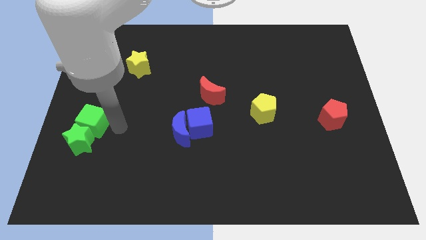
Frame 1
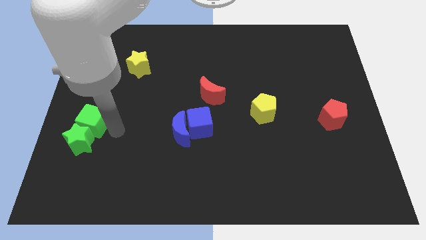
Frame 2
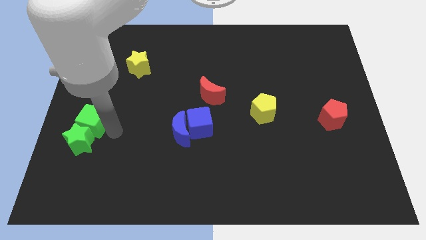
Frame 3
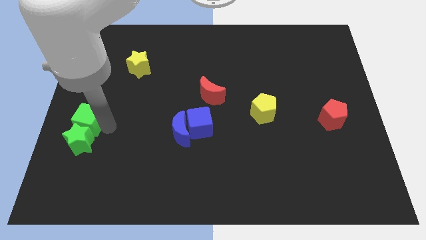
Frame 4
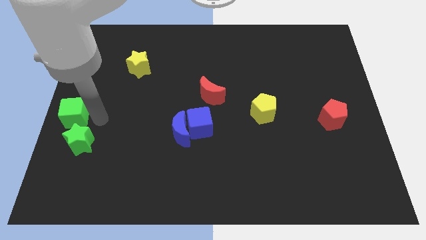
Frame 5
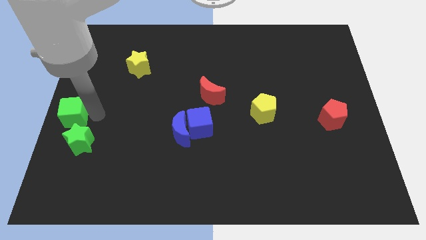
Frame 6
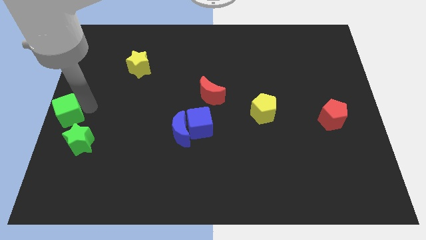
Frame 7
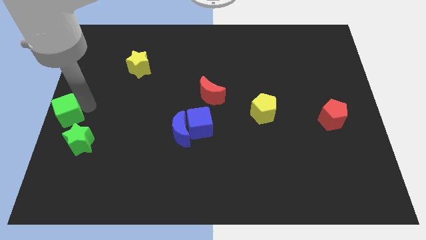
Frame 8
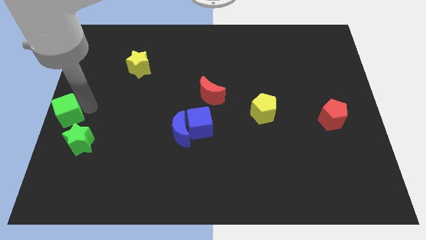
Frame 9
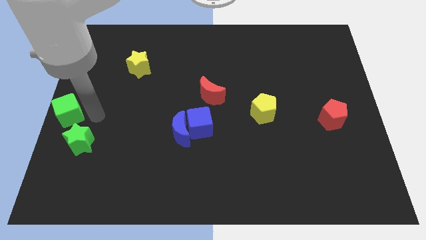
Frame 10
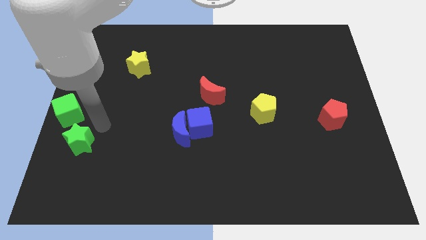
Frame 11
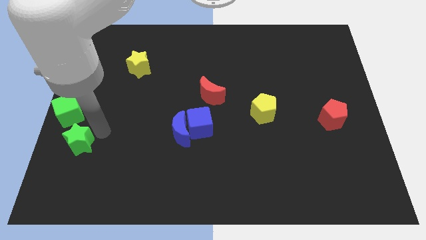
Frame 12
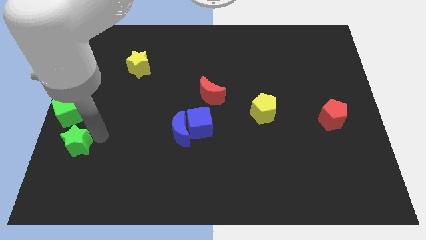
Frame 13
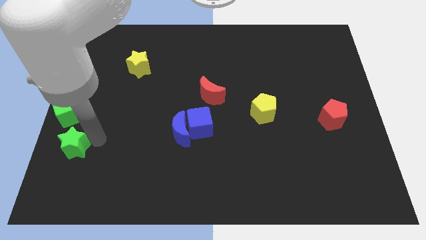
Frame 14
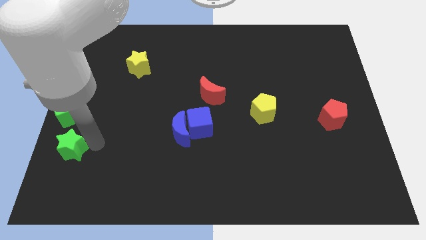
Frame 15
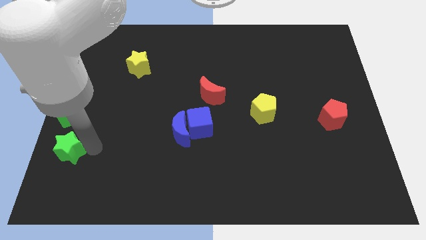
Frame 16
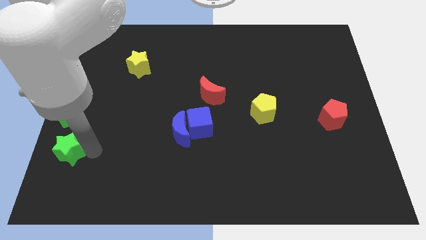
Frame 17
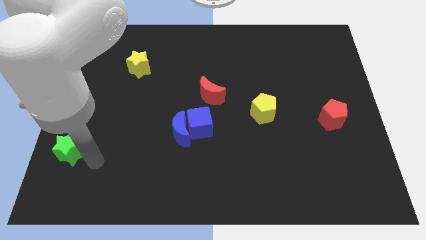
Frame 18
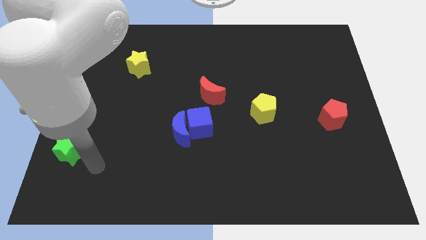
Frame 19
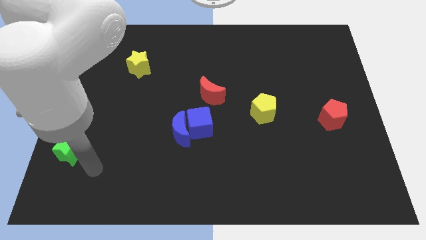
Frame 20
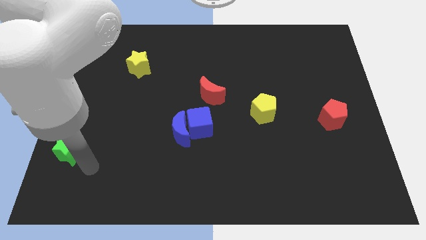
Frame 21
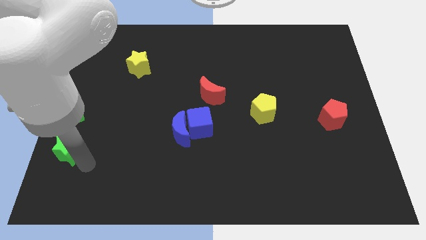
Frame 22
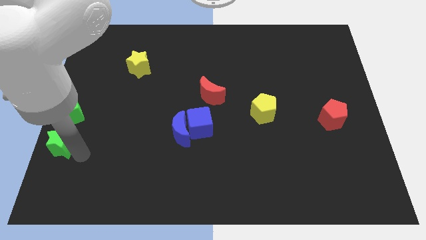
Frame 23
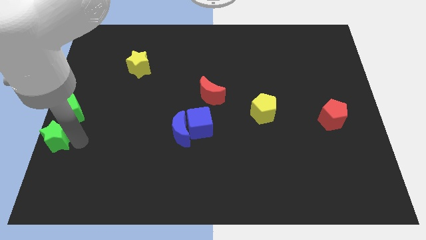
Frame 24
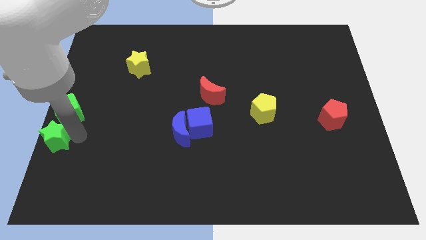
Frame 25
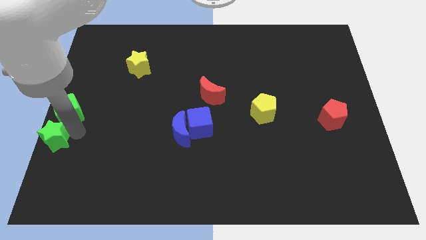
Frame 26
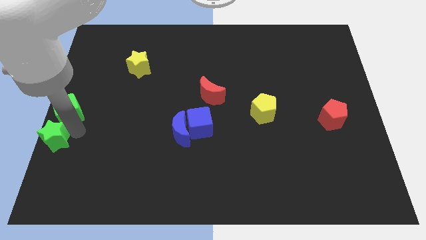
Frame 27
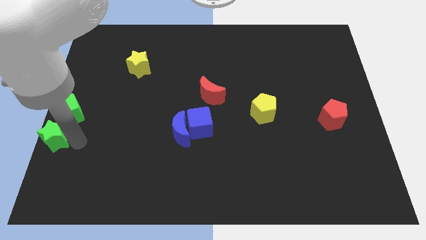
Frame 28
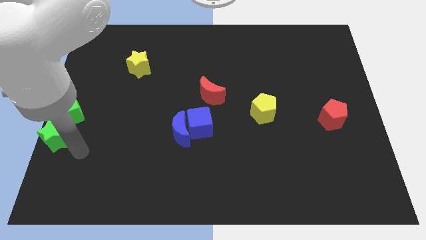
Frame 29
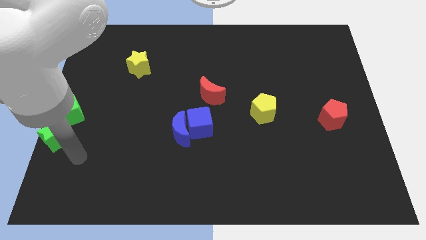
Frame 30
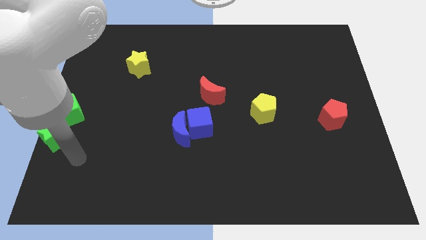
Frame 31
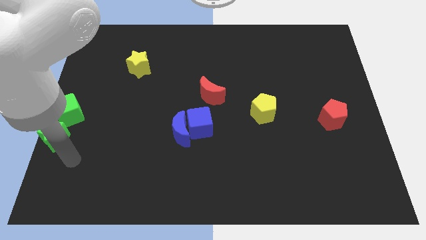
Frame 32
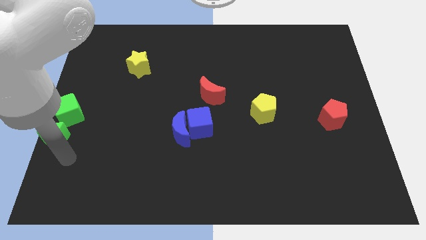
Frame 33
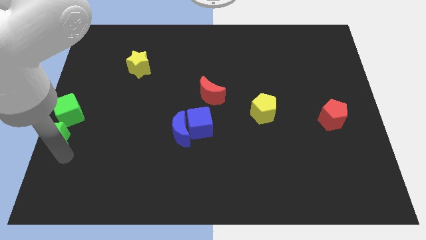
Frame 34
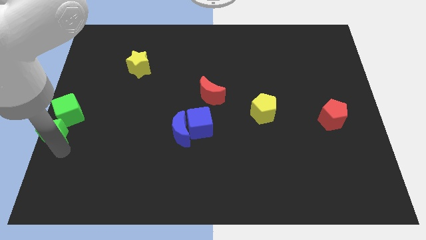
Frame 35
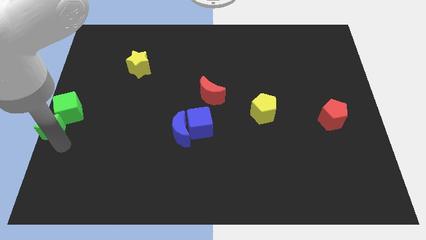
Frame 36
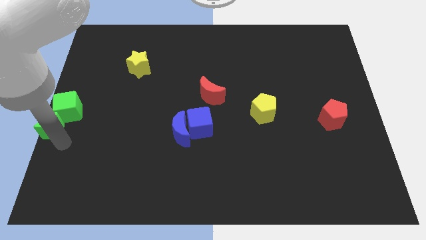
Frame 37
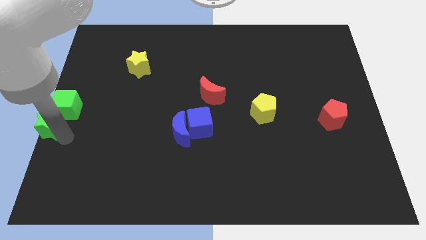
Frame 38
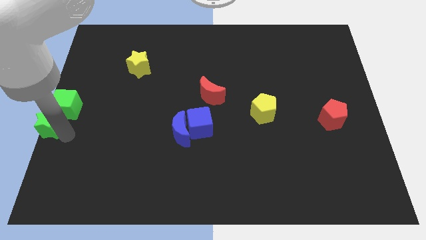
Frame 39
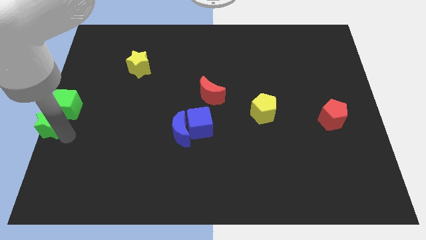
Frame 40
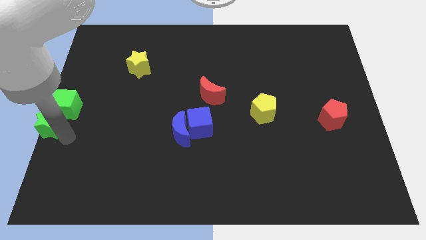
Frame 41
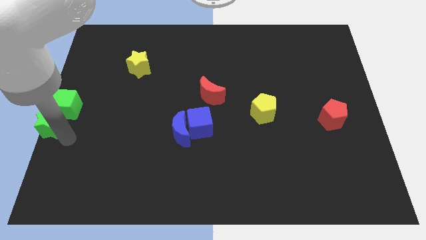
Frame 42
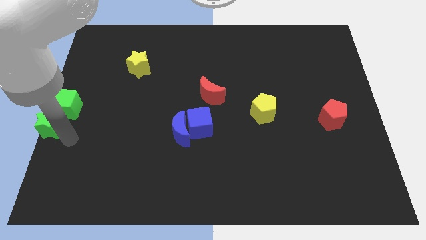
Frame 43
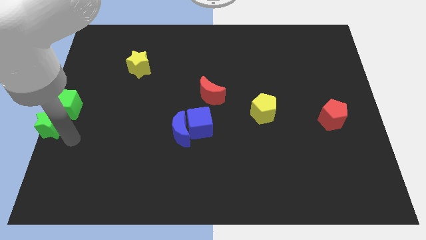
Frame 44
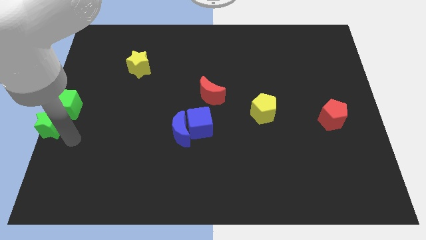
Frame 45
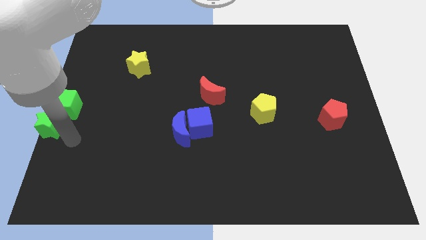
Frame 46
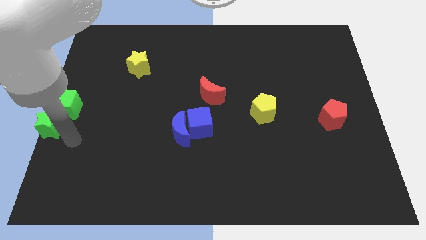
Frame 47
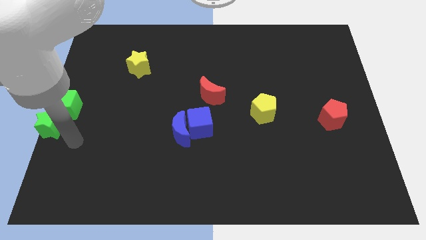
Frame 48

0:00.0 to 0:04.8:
put the two green block at the center left of the board

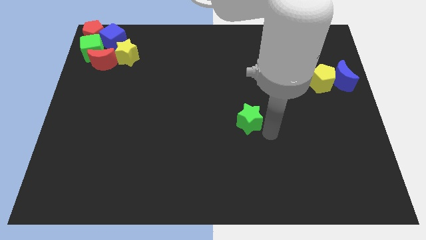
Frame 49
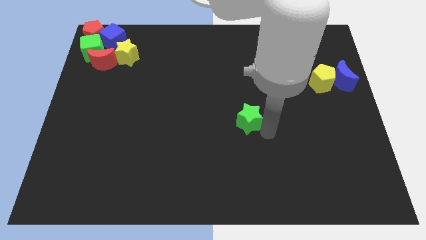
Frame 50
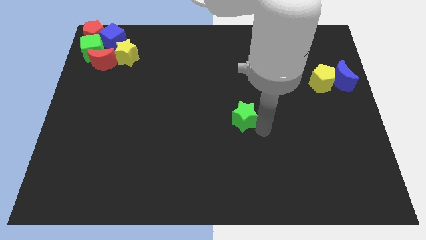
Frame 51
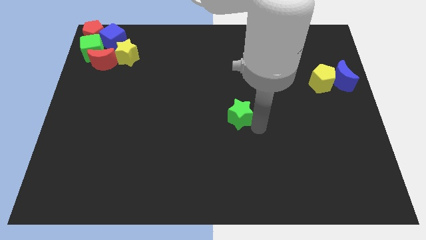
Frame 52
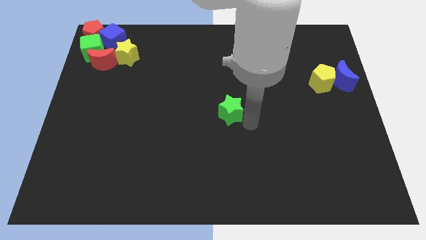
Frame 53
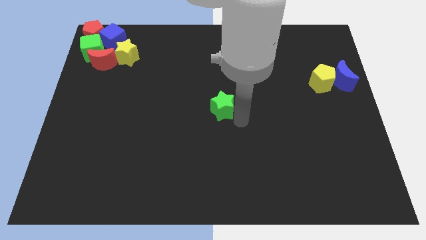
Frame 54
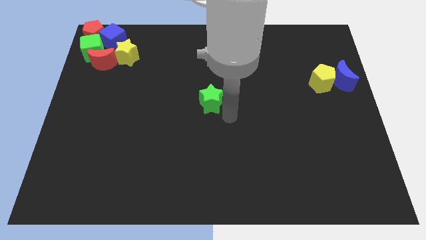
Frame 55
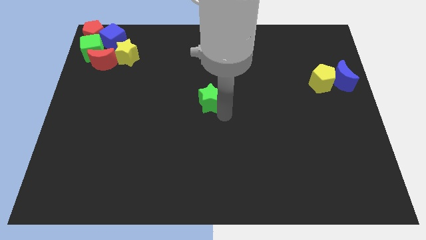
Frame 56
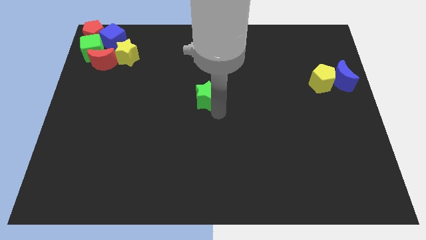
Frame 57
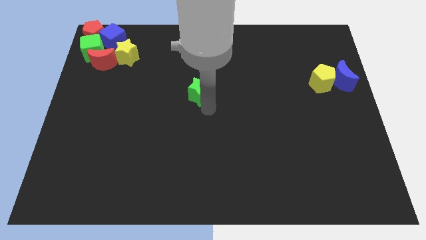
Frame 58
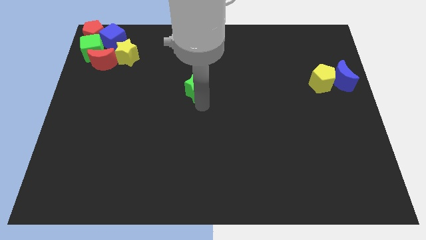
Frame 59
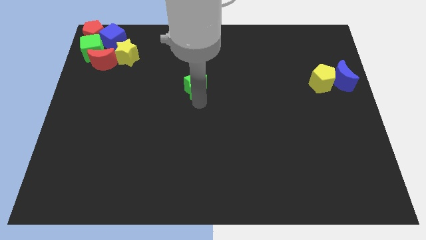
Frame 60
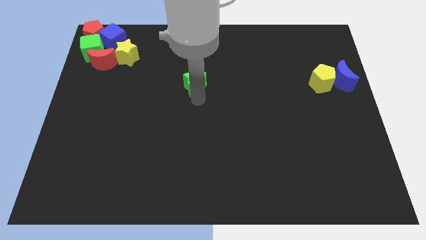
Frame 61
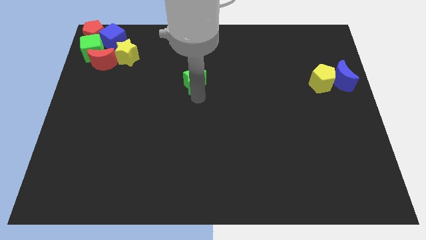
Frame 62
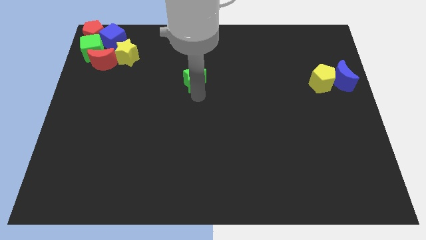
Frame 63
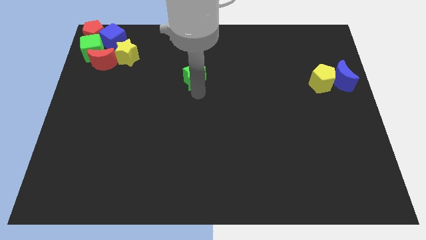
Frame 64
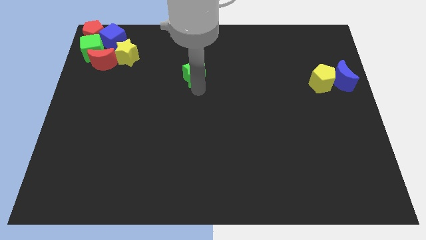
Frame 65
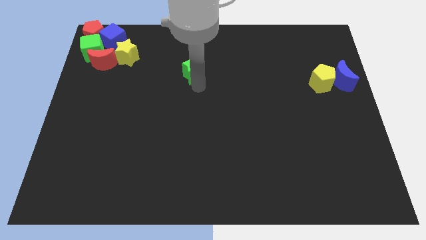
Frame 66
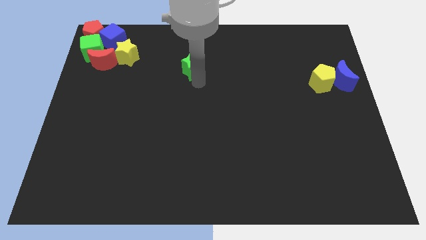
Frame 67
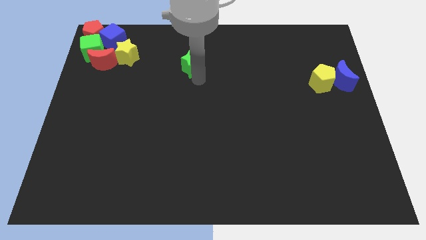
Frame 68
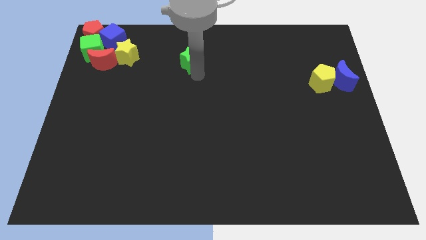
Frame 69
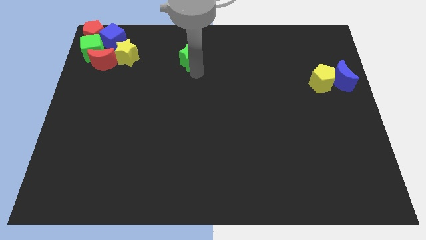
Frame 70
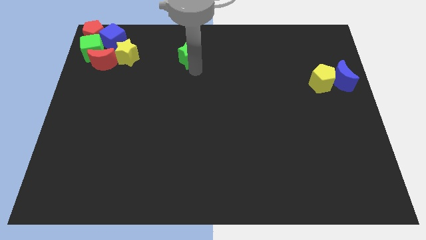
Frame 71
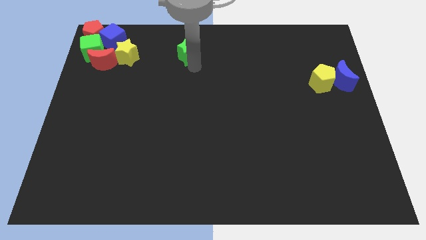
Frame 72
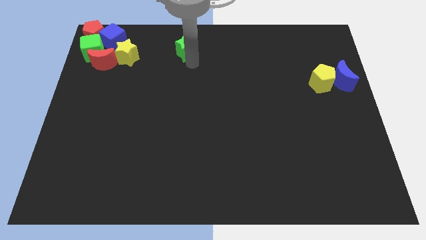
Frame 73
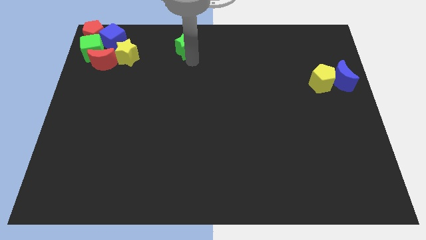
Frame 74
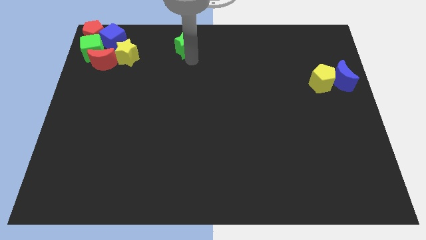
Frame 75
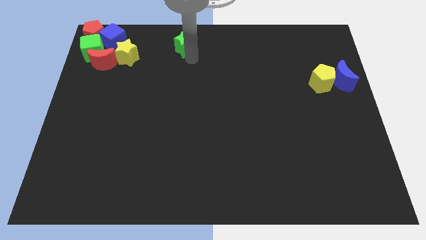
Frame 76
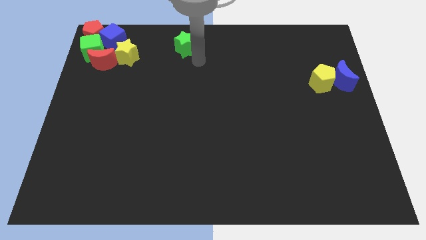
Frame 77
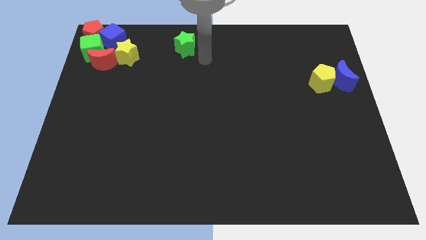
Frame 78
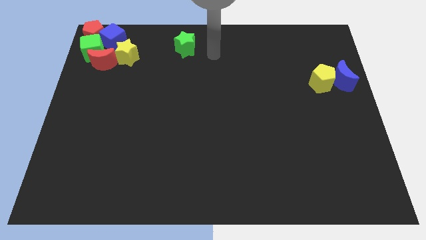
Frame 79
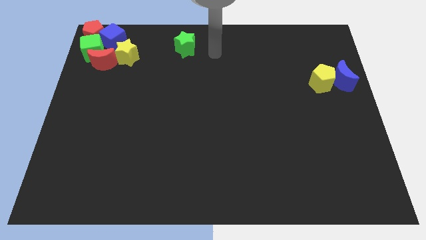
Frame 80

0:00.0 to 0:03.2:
move the green star parallel right to yellow star

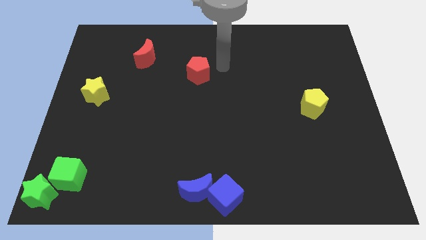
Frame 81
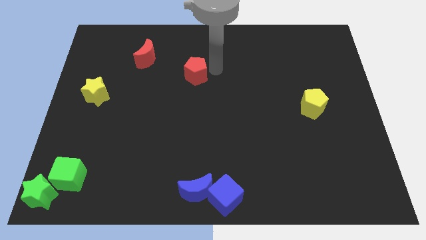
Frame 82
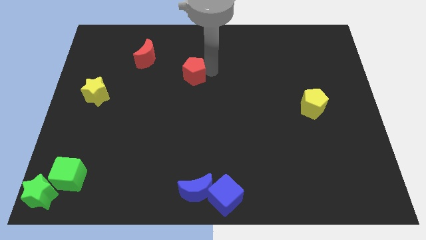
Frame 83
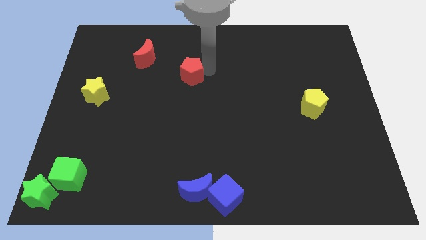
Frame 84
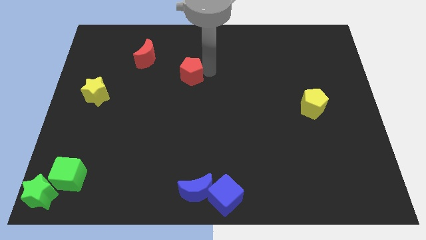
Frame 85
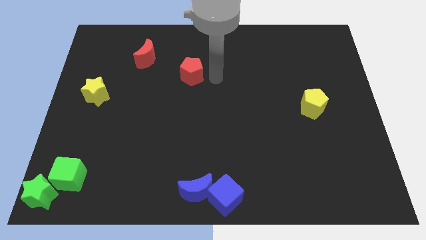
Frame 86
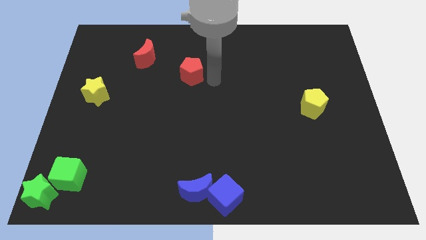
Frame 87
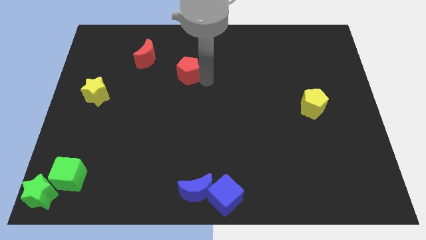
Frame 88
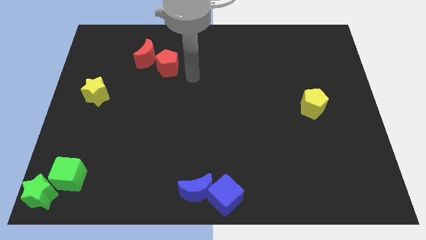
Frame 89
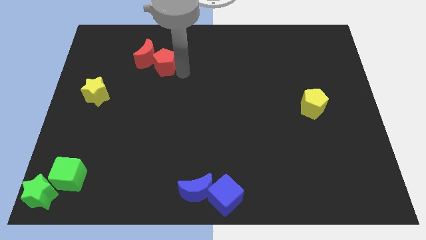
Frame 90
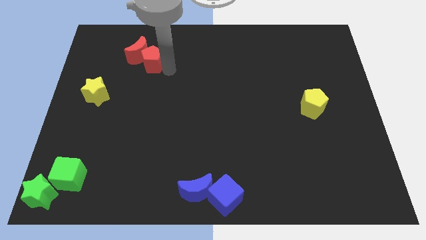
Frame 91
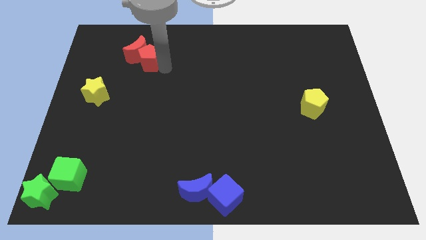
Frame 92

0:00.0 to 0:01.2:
move the red pentagon into the red crescent
